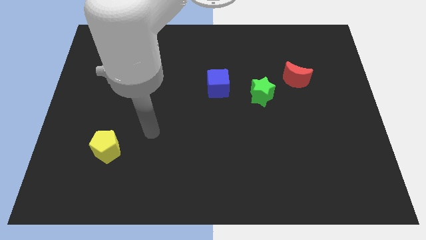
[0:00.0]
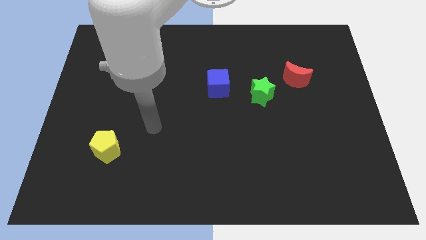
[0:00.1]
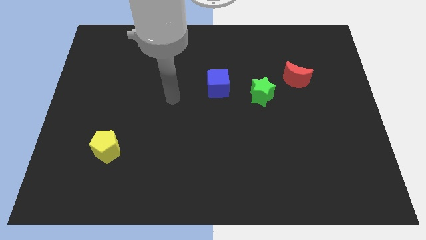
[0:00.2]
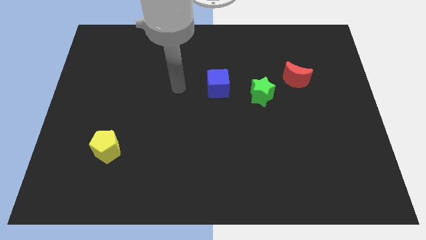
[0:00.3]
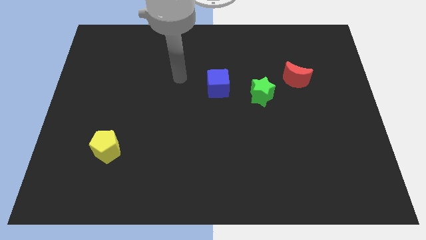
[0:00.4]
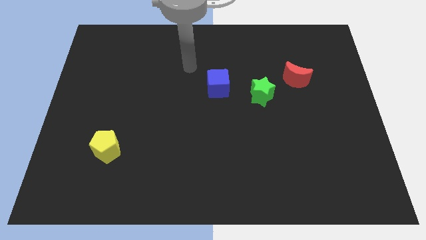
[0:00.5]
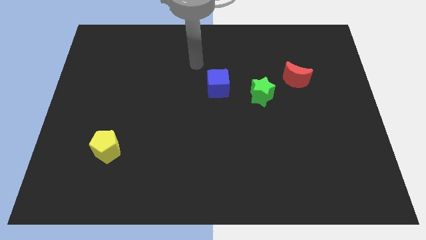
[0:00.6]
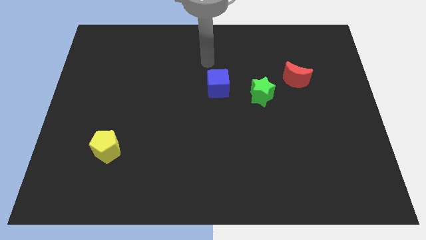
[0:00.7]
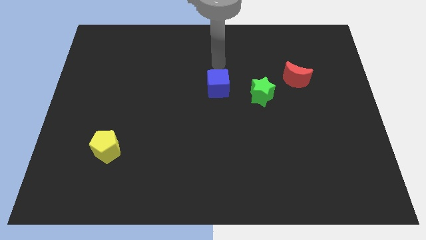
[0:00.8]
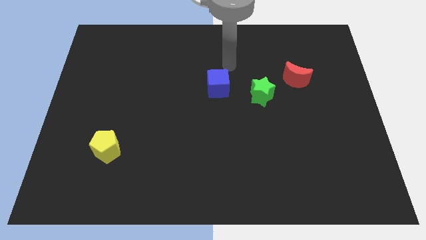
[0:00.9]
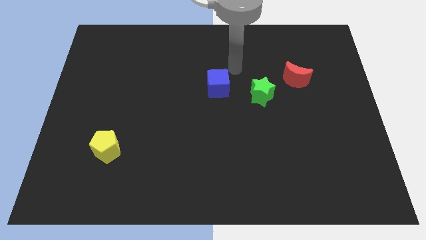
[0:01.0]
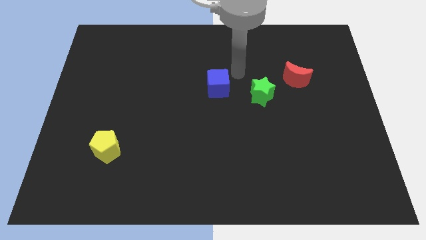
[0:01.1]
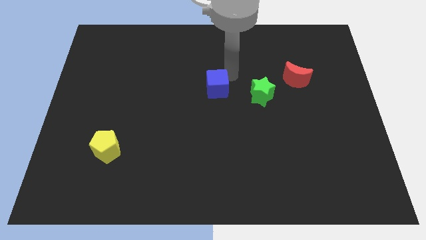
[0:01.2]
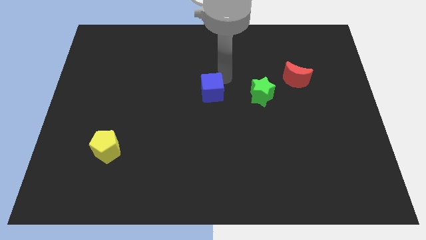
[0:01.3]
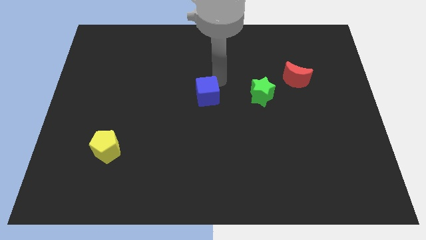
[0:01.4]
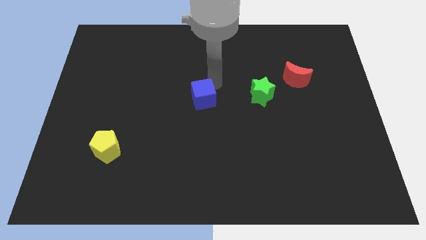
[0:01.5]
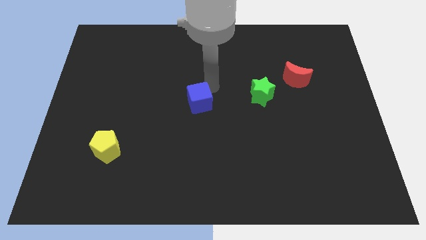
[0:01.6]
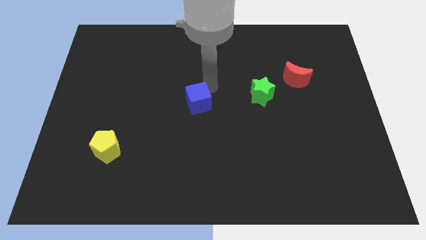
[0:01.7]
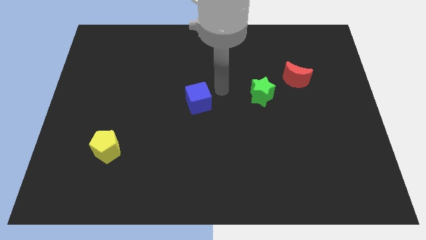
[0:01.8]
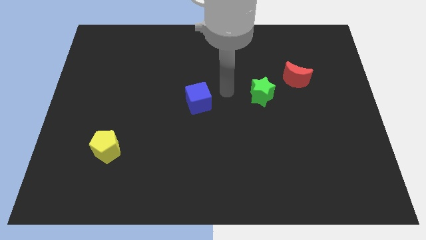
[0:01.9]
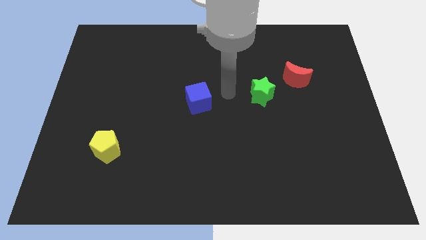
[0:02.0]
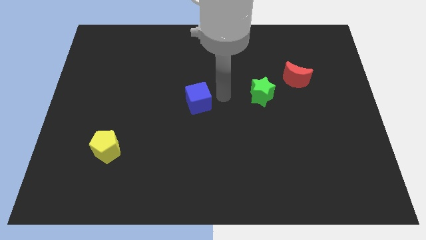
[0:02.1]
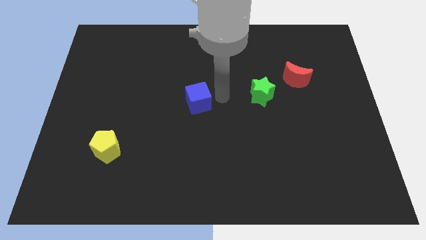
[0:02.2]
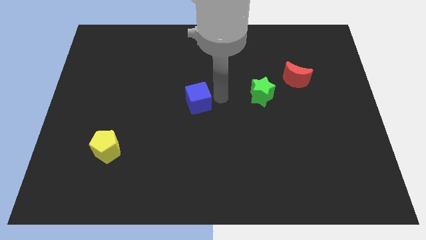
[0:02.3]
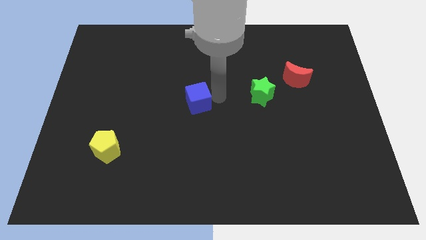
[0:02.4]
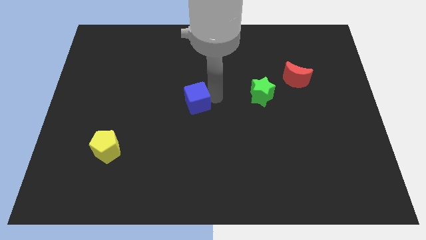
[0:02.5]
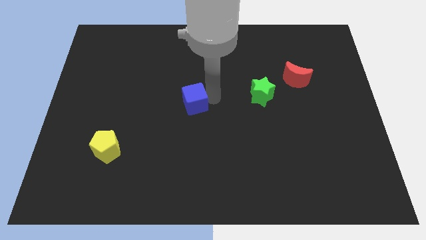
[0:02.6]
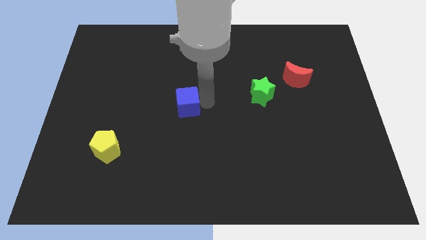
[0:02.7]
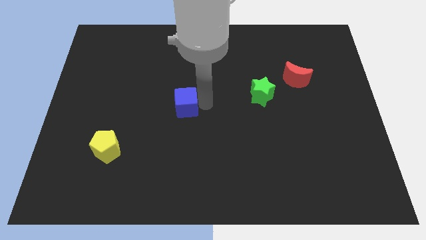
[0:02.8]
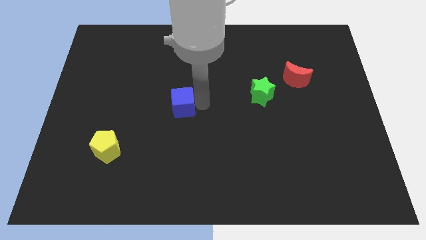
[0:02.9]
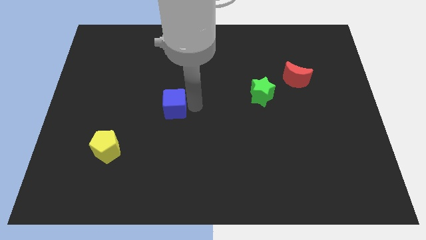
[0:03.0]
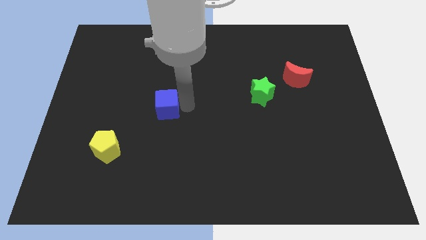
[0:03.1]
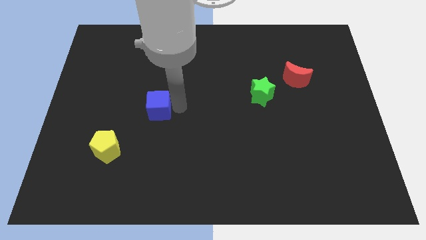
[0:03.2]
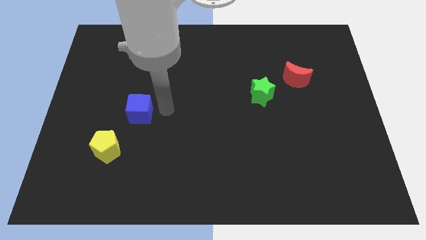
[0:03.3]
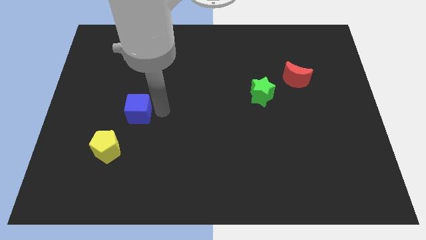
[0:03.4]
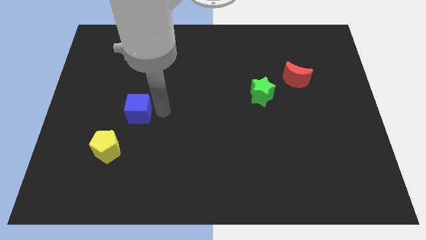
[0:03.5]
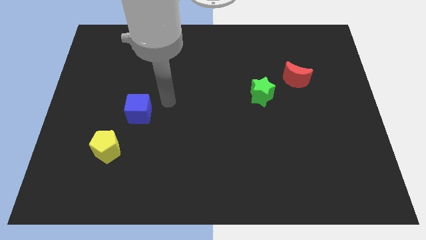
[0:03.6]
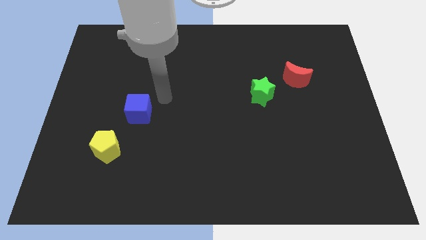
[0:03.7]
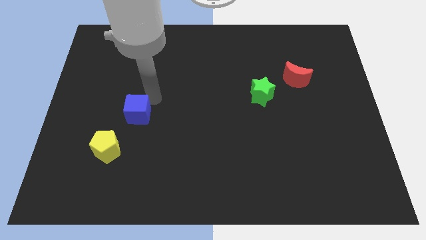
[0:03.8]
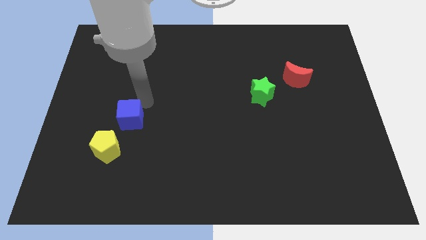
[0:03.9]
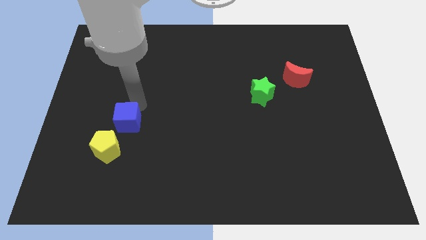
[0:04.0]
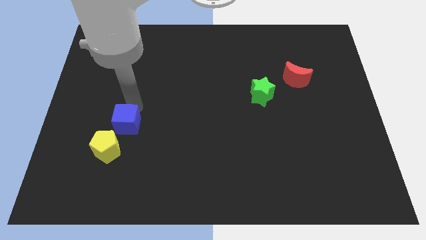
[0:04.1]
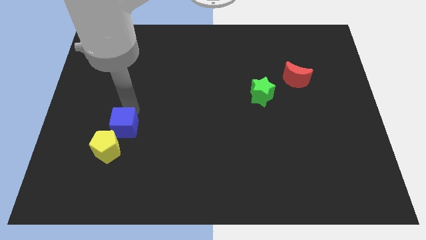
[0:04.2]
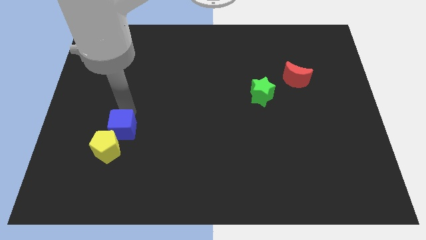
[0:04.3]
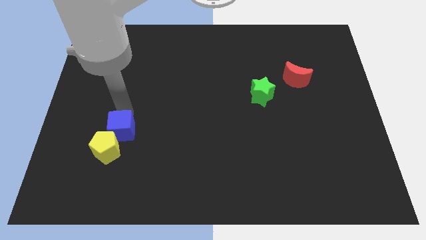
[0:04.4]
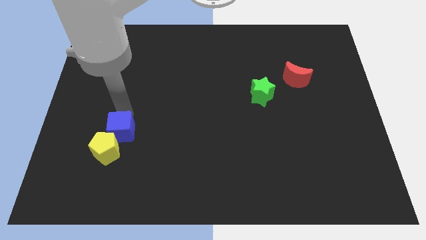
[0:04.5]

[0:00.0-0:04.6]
move the cube to the pentagon

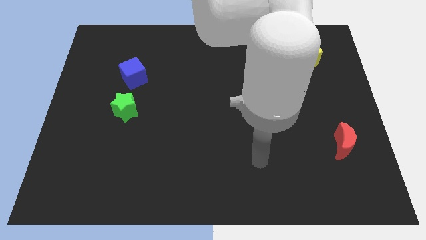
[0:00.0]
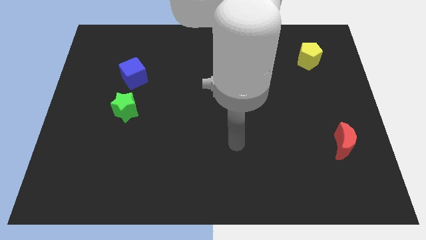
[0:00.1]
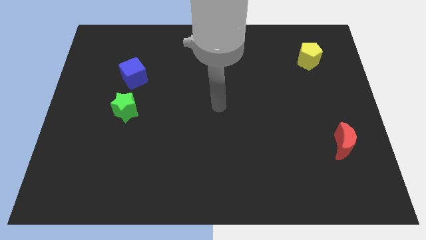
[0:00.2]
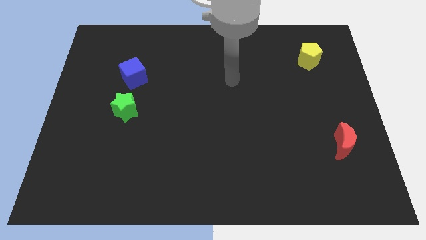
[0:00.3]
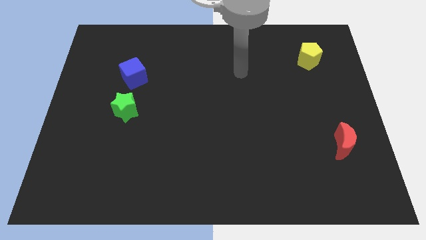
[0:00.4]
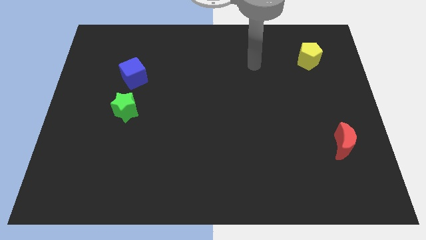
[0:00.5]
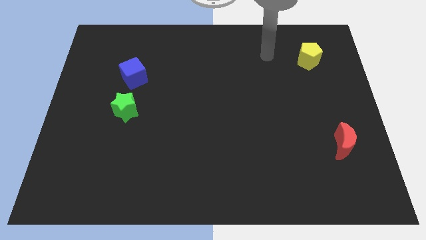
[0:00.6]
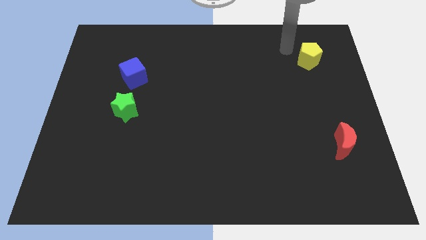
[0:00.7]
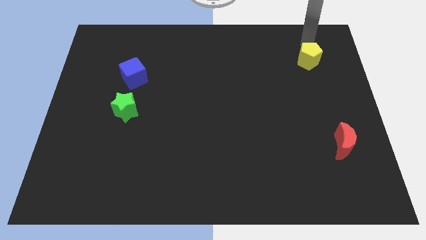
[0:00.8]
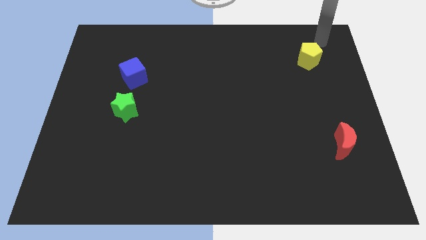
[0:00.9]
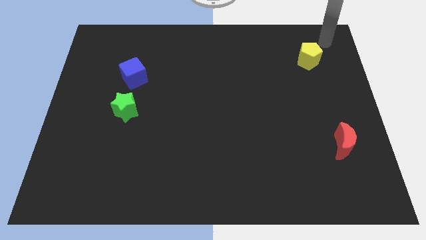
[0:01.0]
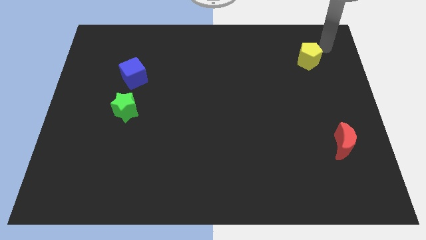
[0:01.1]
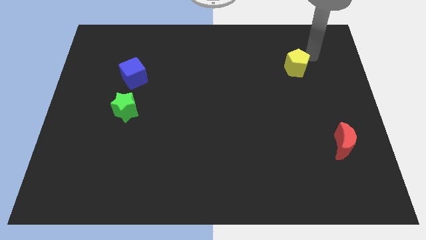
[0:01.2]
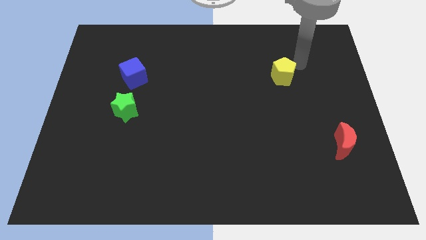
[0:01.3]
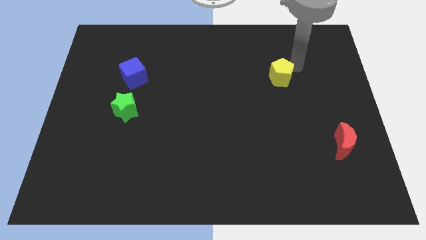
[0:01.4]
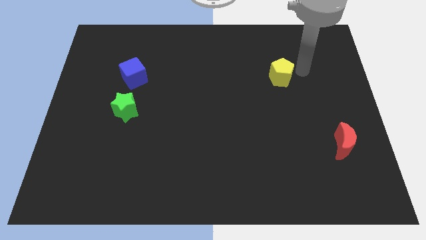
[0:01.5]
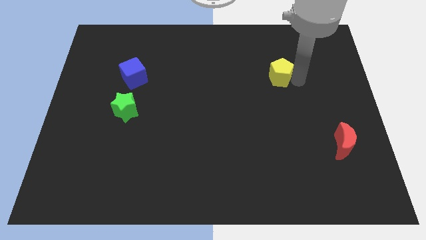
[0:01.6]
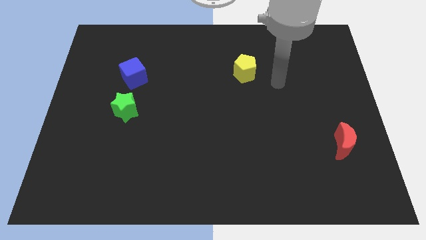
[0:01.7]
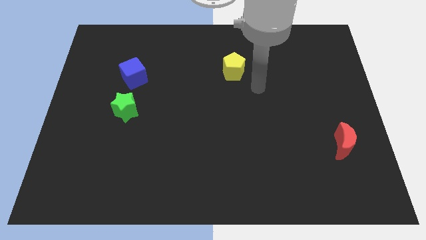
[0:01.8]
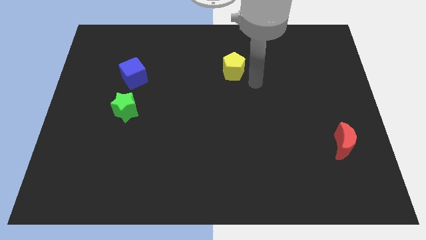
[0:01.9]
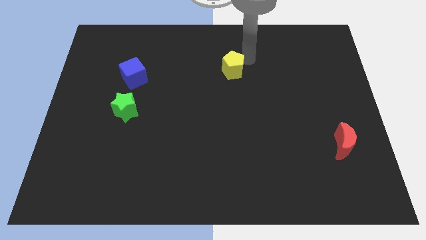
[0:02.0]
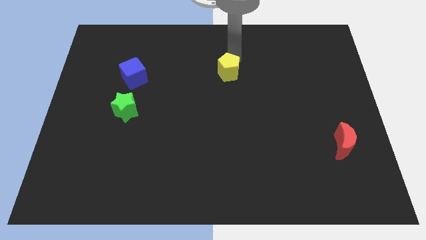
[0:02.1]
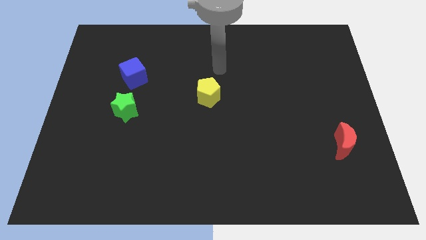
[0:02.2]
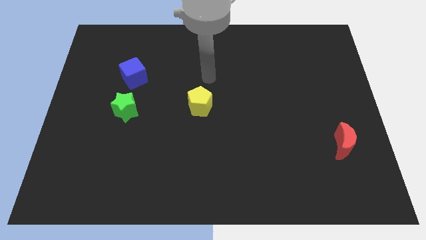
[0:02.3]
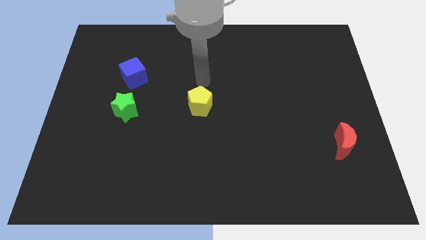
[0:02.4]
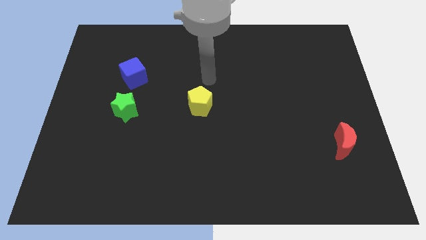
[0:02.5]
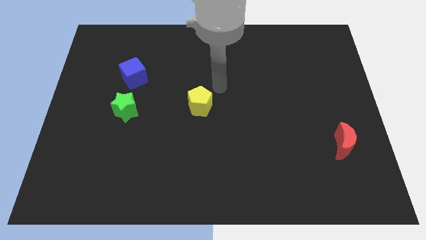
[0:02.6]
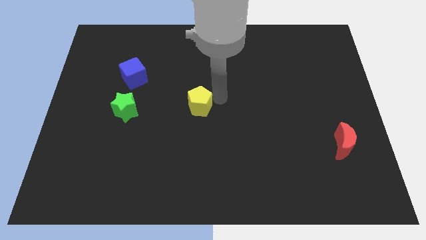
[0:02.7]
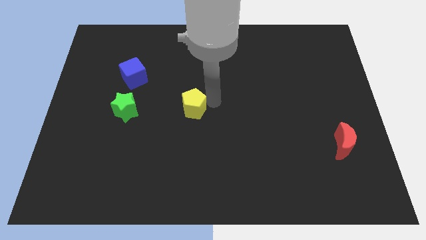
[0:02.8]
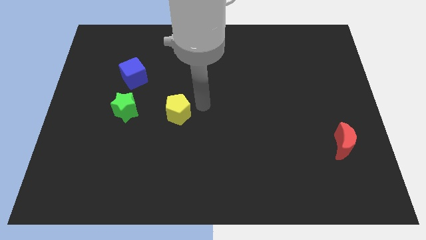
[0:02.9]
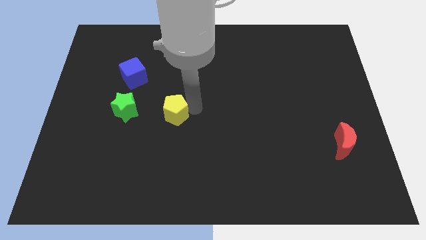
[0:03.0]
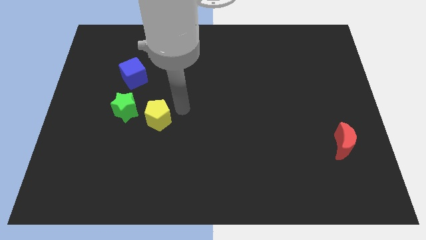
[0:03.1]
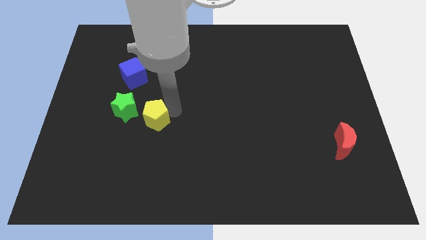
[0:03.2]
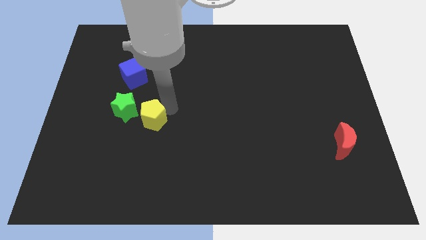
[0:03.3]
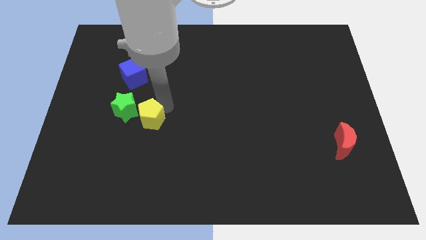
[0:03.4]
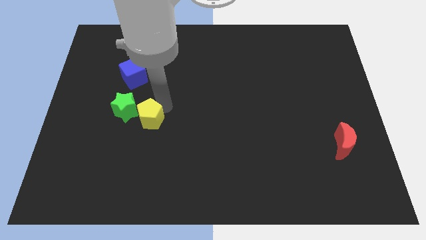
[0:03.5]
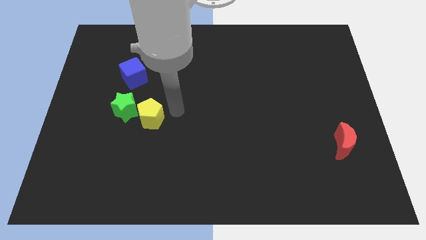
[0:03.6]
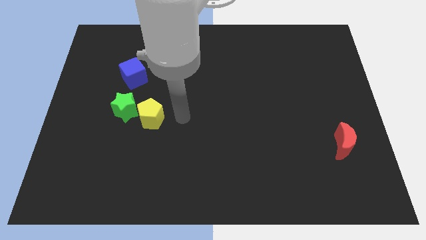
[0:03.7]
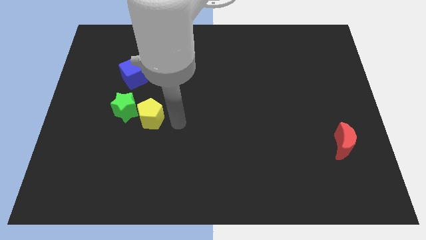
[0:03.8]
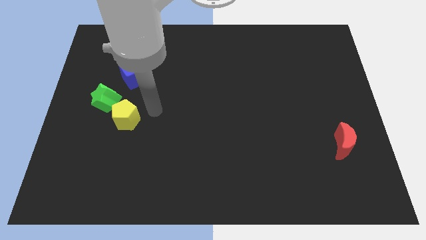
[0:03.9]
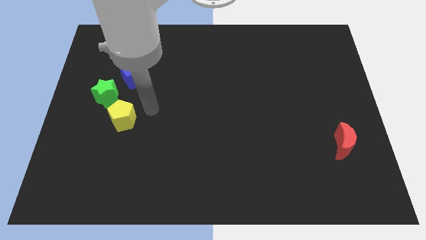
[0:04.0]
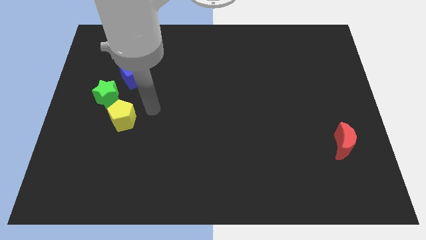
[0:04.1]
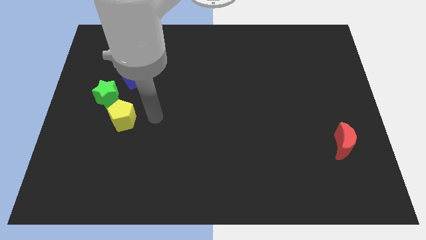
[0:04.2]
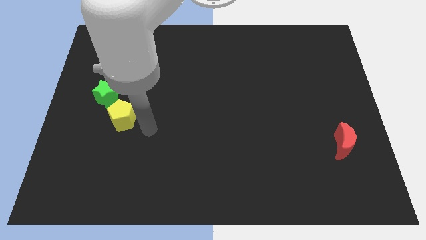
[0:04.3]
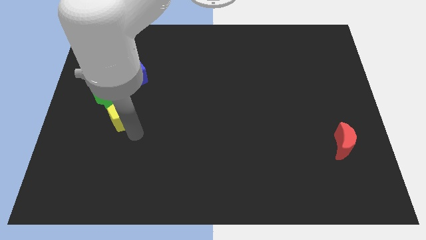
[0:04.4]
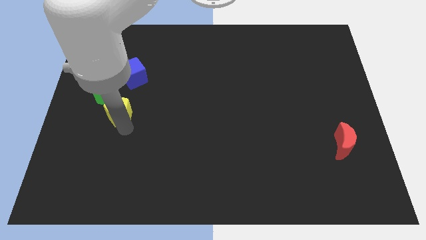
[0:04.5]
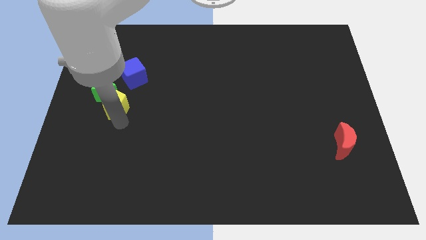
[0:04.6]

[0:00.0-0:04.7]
slide the yellow pentagon next to the green star
